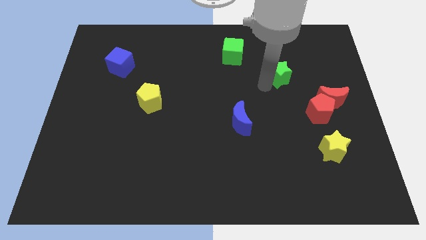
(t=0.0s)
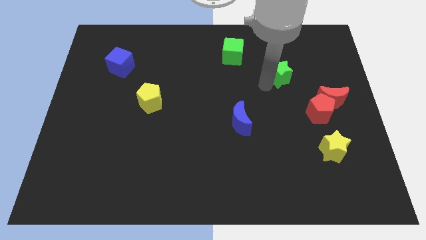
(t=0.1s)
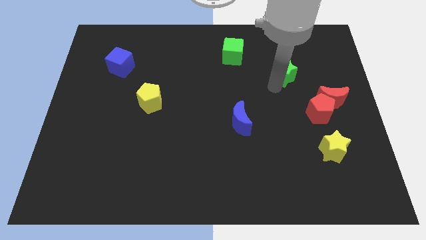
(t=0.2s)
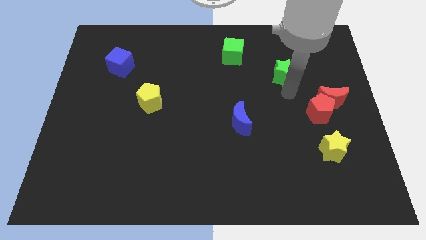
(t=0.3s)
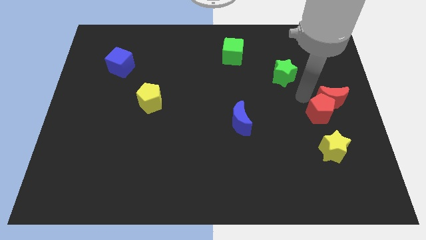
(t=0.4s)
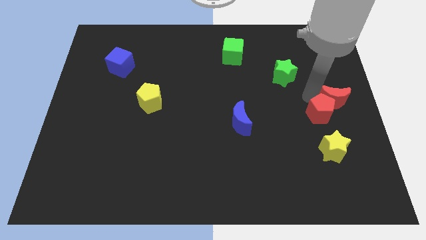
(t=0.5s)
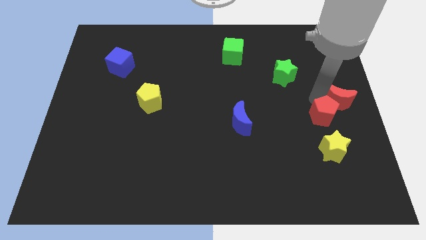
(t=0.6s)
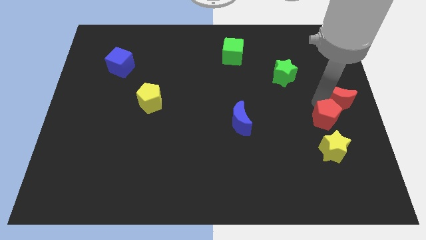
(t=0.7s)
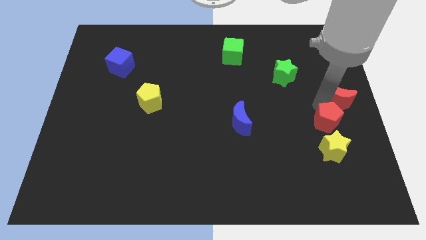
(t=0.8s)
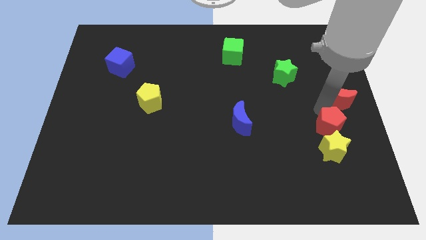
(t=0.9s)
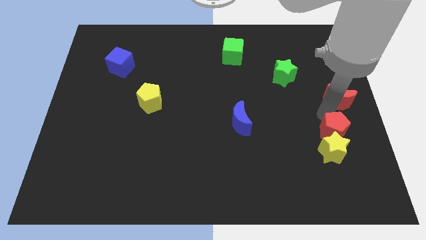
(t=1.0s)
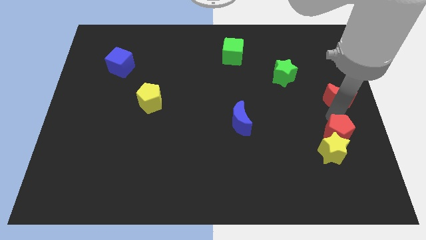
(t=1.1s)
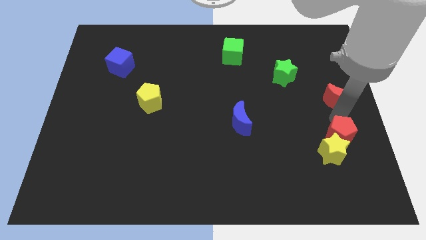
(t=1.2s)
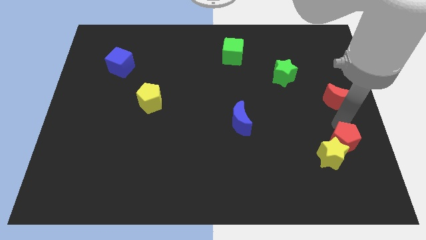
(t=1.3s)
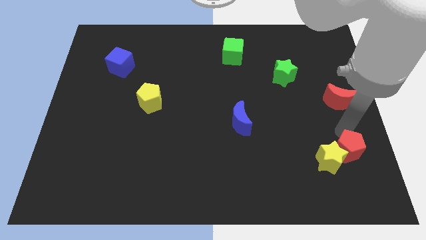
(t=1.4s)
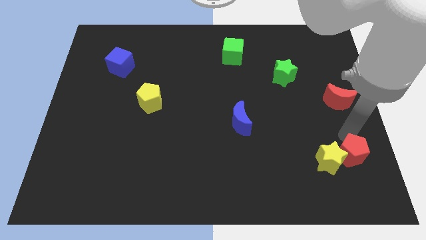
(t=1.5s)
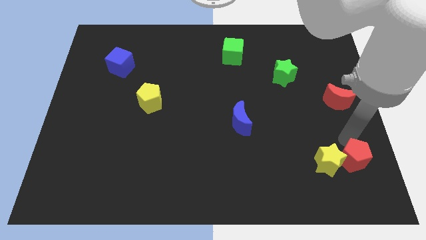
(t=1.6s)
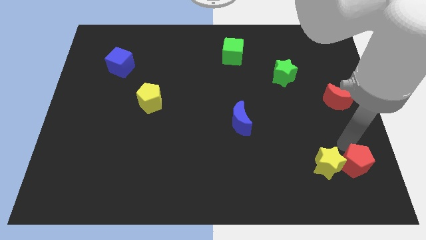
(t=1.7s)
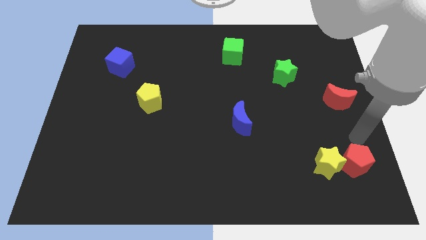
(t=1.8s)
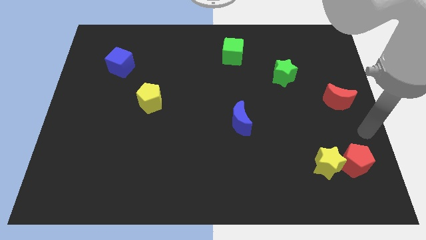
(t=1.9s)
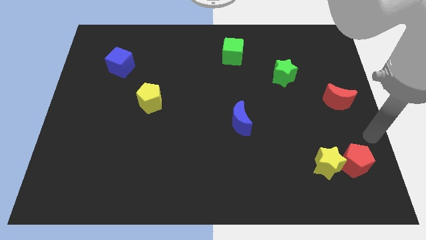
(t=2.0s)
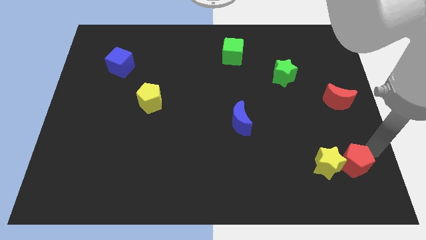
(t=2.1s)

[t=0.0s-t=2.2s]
push the red pentagon right to the yellow star

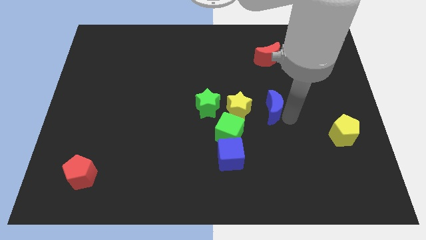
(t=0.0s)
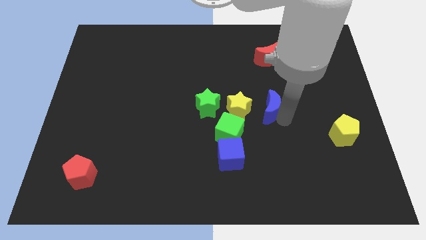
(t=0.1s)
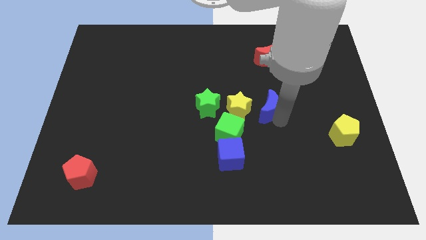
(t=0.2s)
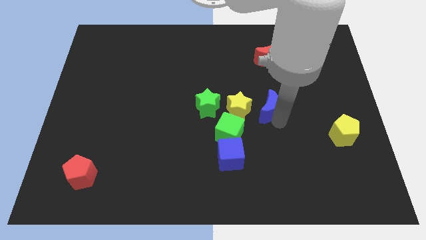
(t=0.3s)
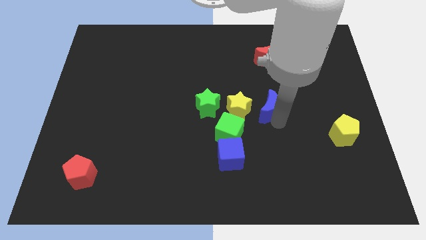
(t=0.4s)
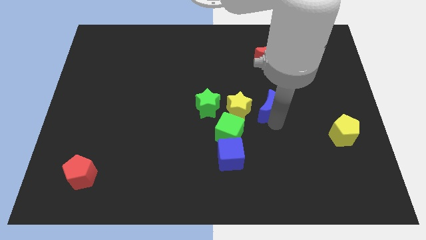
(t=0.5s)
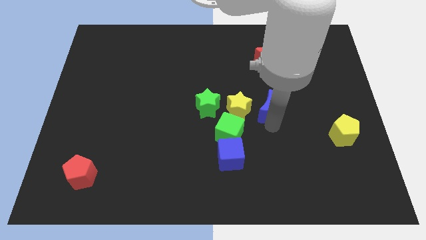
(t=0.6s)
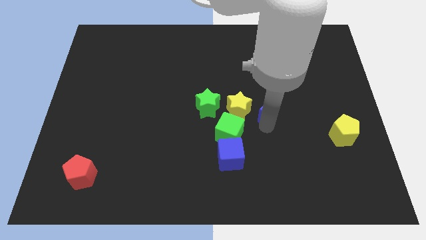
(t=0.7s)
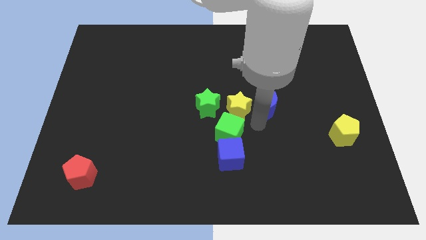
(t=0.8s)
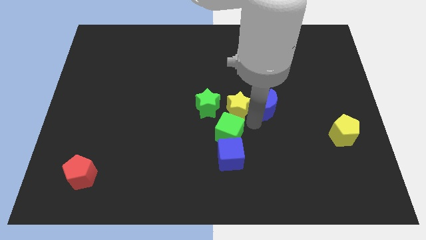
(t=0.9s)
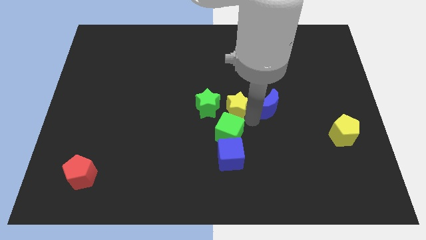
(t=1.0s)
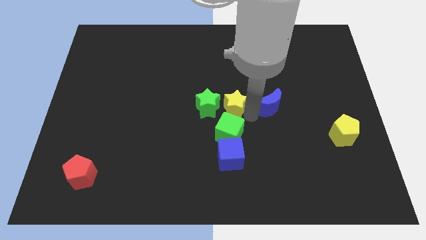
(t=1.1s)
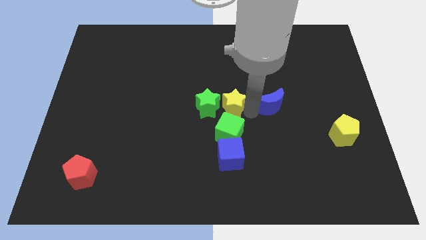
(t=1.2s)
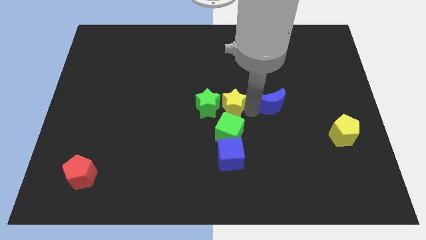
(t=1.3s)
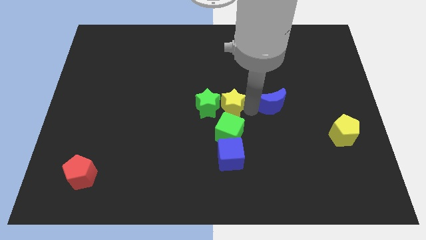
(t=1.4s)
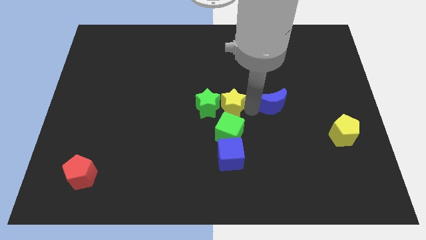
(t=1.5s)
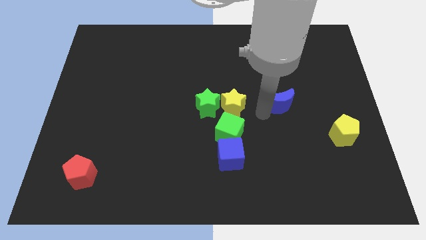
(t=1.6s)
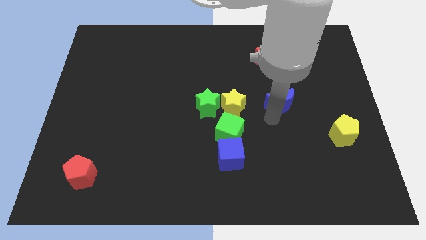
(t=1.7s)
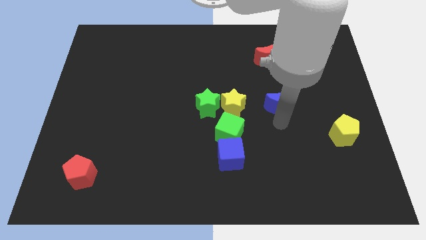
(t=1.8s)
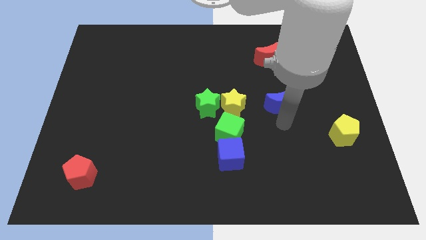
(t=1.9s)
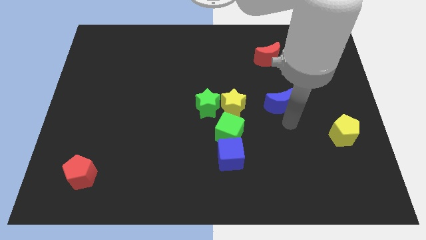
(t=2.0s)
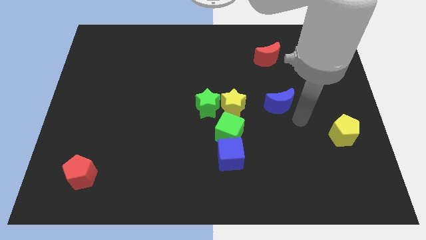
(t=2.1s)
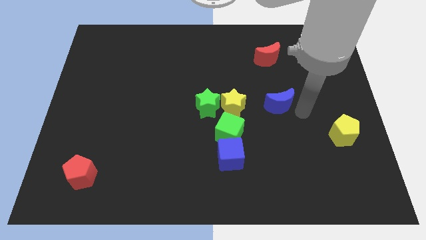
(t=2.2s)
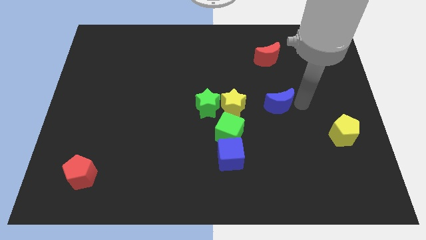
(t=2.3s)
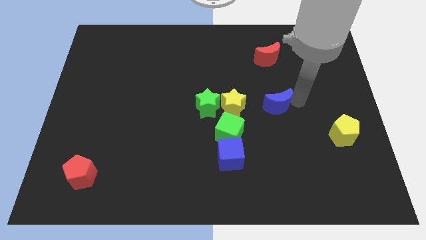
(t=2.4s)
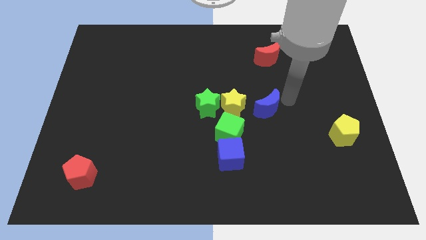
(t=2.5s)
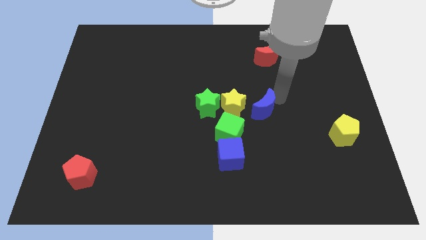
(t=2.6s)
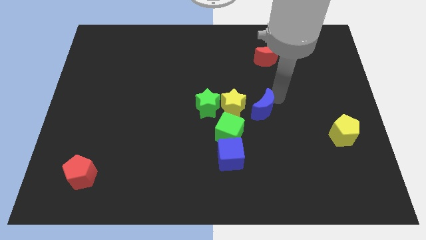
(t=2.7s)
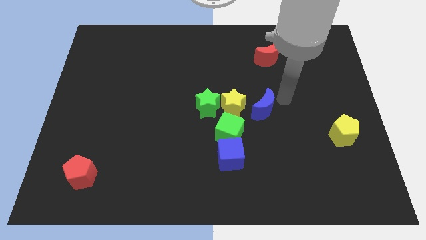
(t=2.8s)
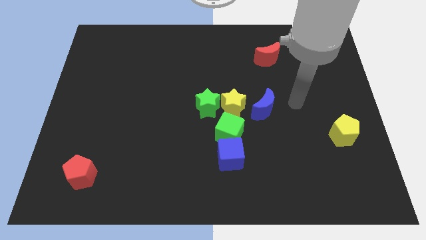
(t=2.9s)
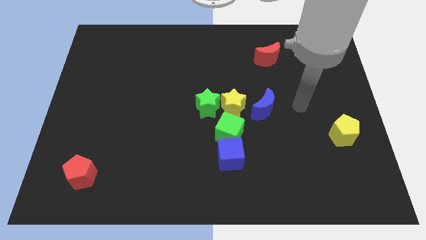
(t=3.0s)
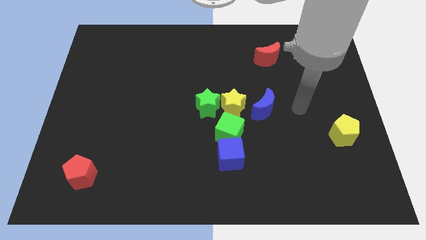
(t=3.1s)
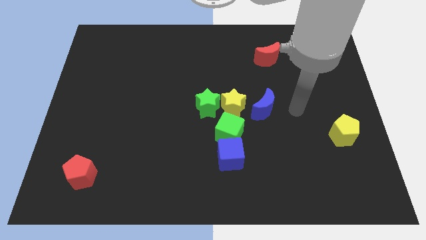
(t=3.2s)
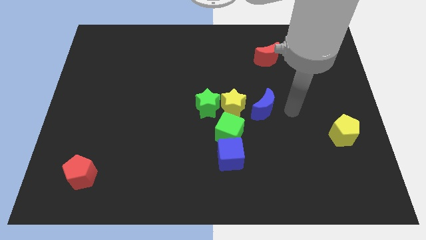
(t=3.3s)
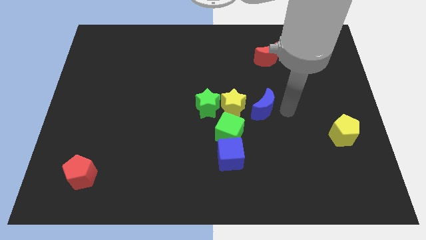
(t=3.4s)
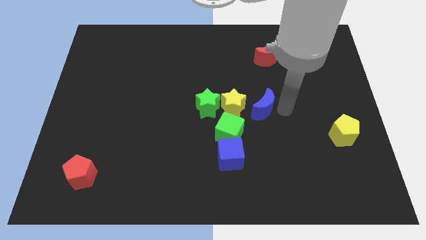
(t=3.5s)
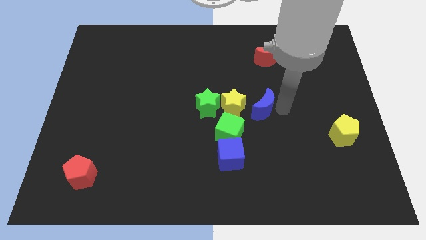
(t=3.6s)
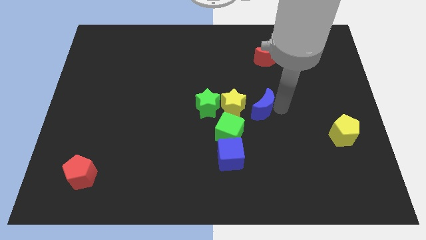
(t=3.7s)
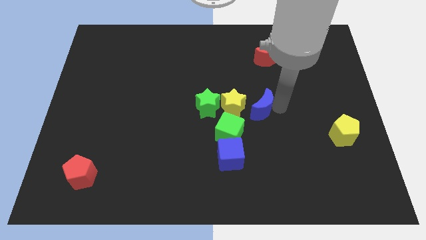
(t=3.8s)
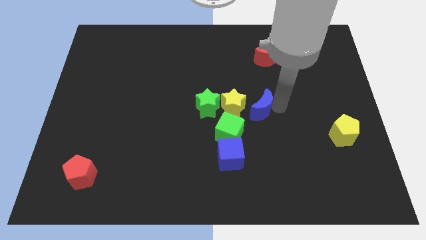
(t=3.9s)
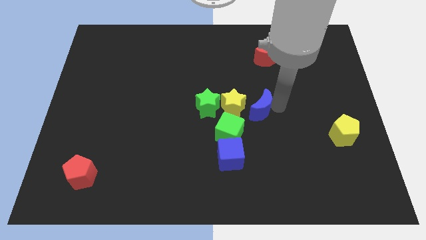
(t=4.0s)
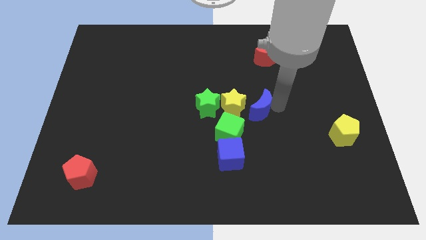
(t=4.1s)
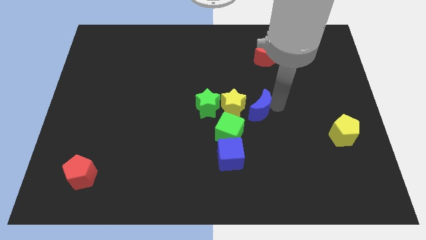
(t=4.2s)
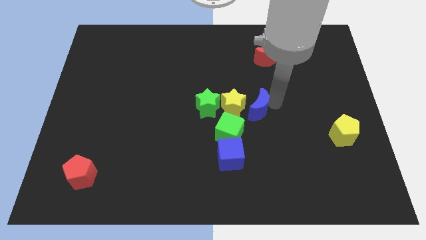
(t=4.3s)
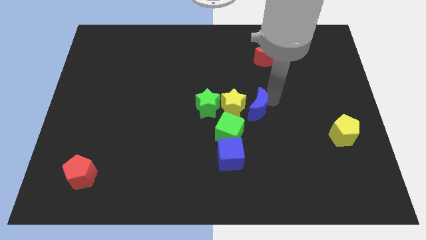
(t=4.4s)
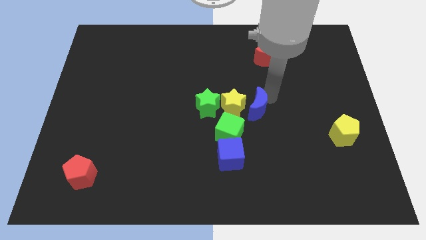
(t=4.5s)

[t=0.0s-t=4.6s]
slightly move the blue crescent towards the yellow star

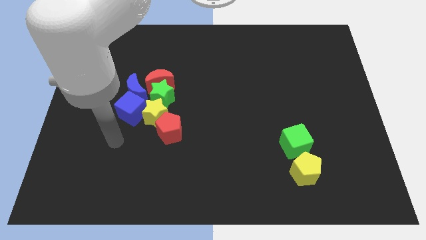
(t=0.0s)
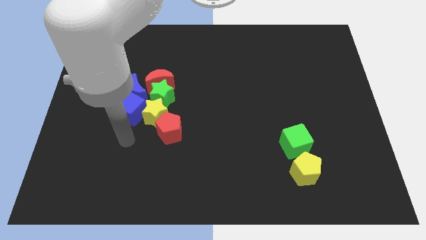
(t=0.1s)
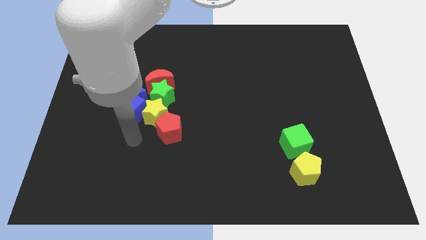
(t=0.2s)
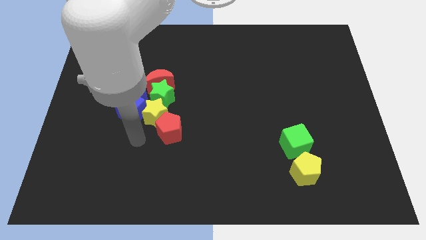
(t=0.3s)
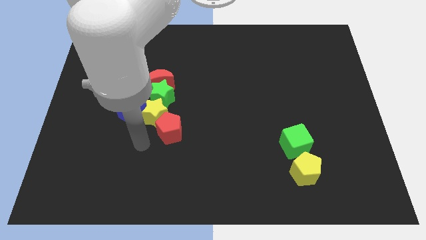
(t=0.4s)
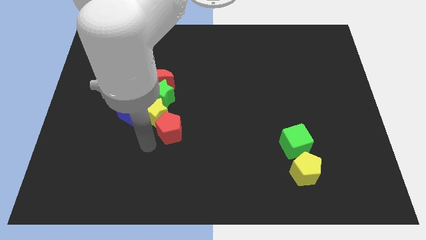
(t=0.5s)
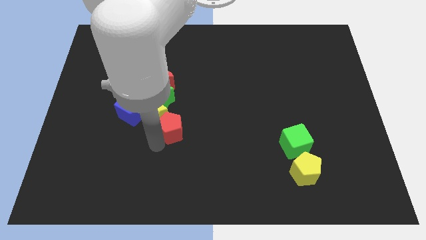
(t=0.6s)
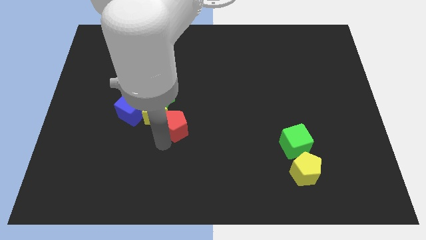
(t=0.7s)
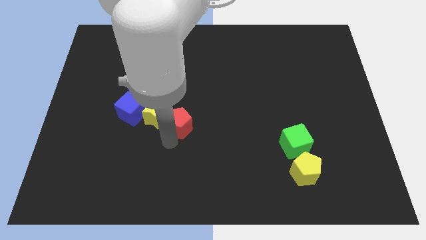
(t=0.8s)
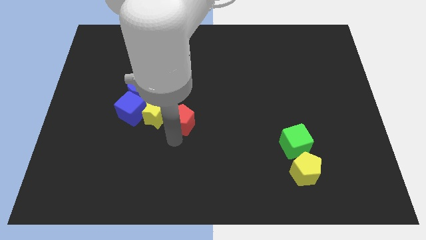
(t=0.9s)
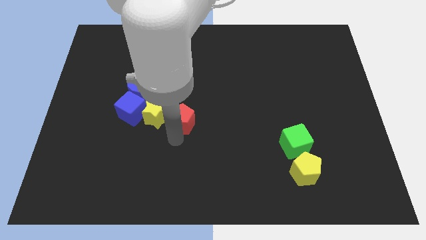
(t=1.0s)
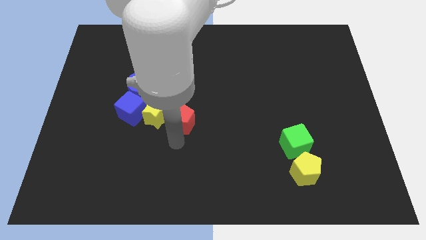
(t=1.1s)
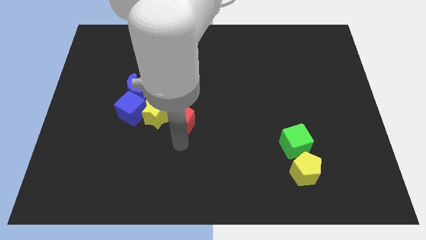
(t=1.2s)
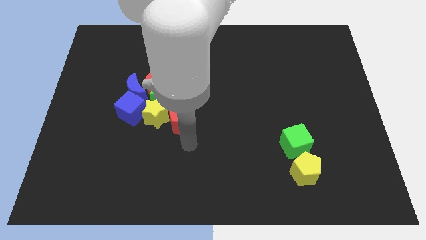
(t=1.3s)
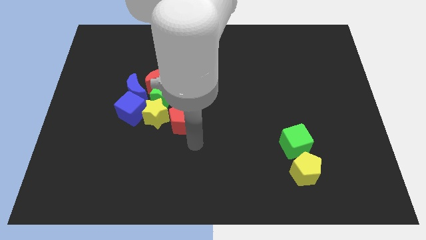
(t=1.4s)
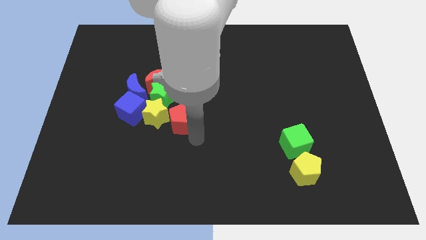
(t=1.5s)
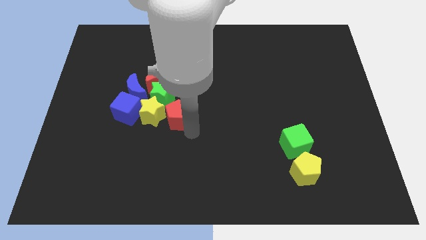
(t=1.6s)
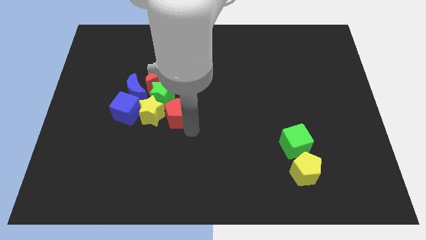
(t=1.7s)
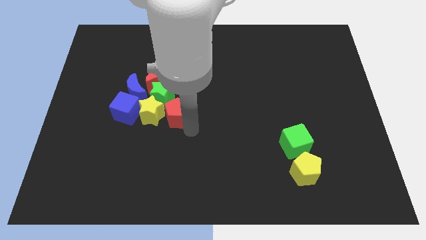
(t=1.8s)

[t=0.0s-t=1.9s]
drag the red pentagon right to the yellow star

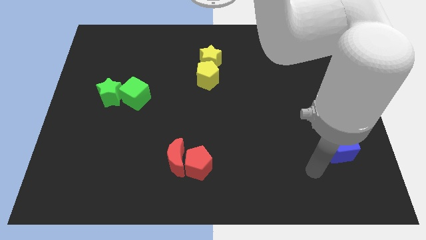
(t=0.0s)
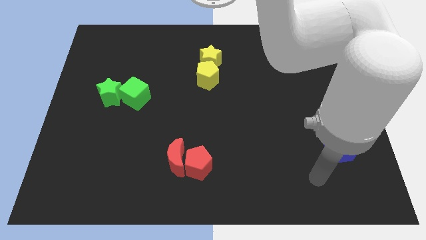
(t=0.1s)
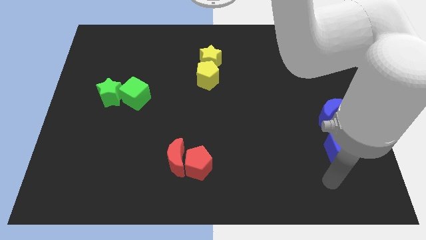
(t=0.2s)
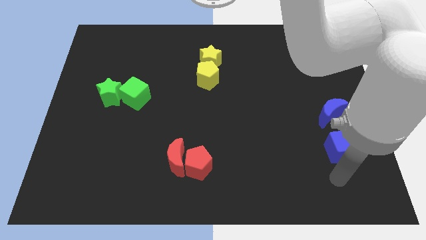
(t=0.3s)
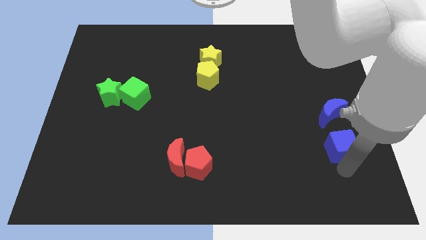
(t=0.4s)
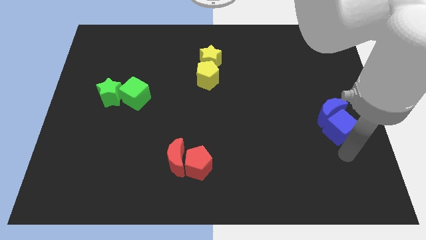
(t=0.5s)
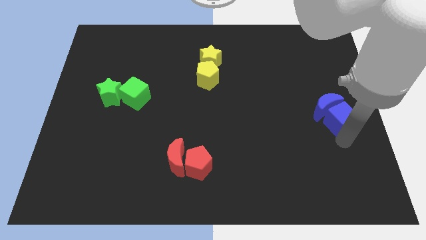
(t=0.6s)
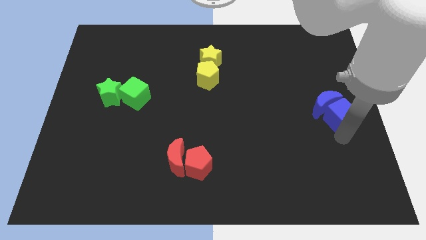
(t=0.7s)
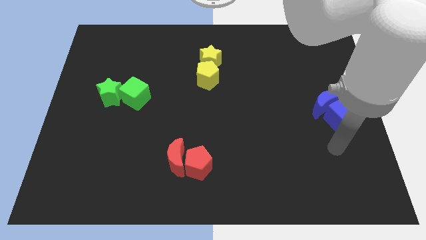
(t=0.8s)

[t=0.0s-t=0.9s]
push the blue cube into the blue moon at the center right
